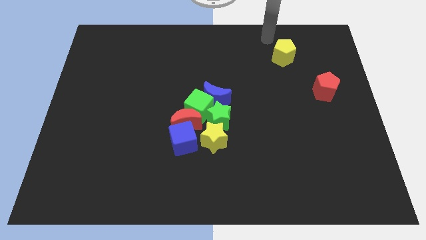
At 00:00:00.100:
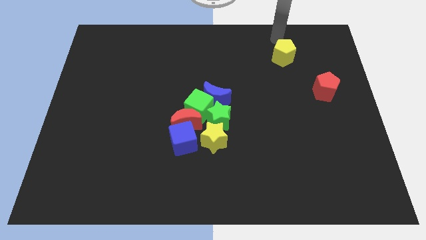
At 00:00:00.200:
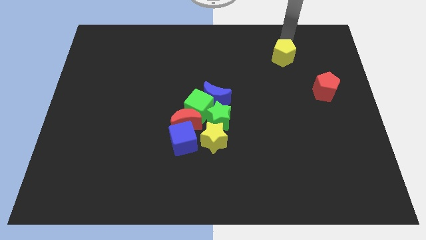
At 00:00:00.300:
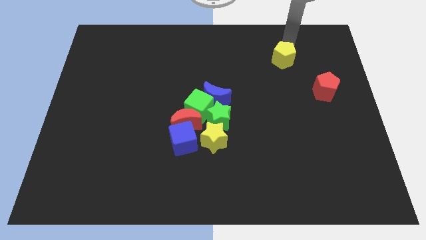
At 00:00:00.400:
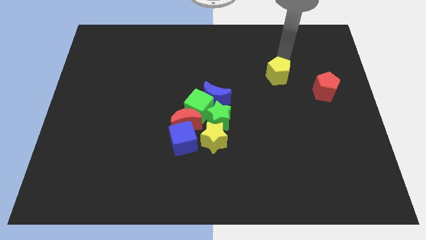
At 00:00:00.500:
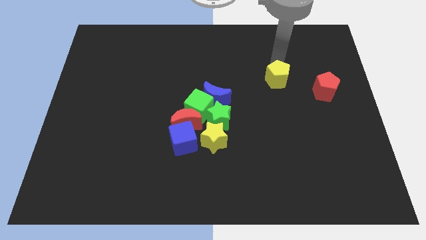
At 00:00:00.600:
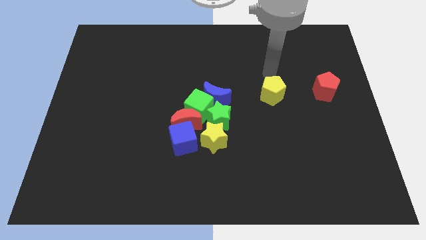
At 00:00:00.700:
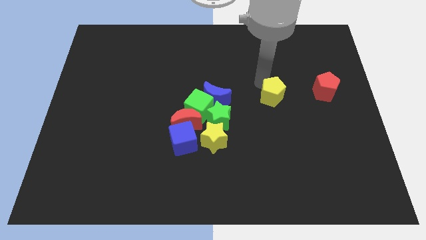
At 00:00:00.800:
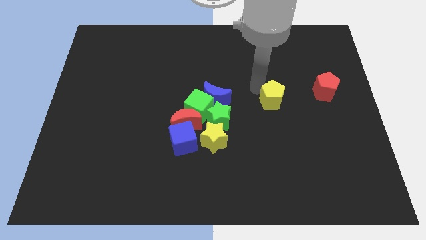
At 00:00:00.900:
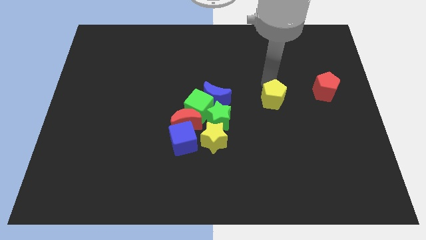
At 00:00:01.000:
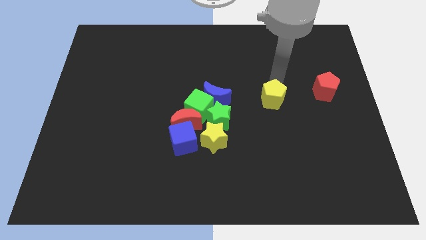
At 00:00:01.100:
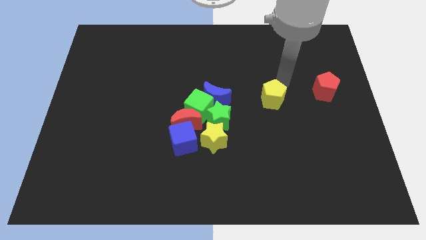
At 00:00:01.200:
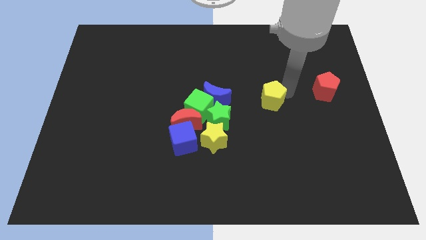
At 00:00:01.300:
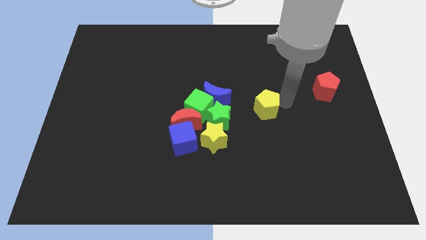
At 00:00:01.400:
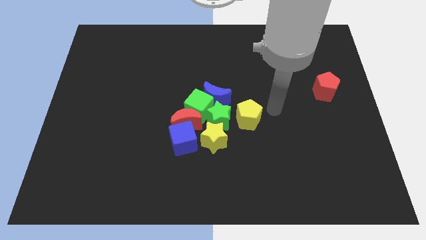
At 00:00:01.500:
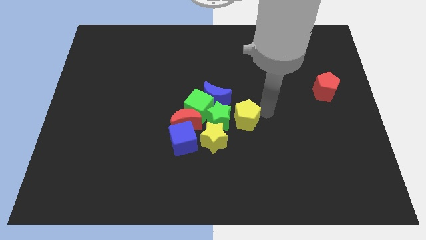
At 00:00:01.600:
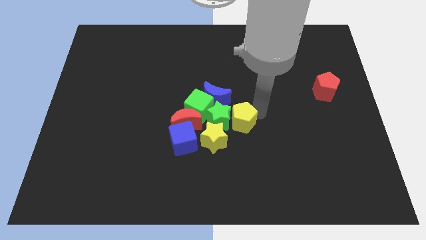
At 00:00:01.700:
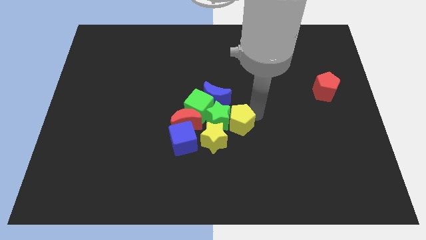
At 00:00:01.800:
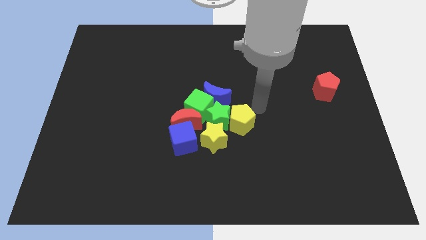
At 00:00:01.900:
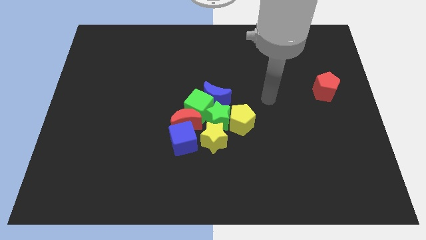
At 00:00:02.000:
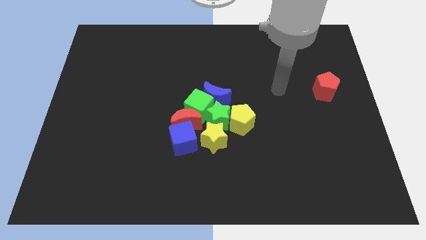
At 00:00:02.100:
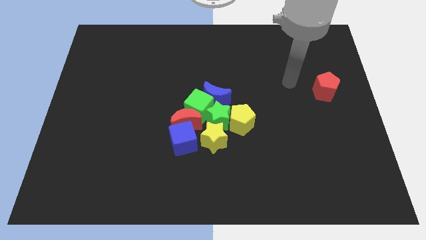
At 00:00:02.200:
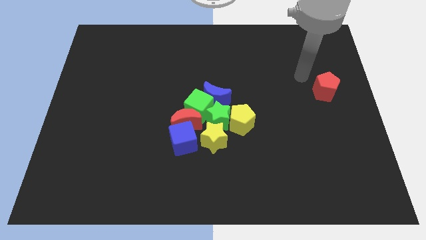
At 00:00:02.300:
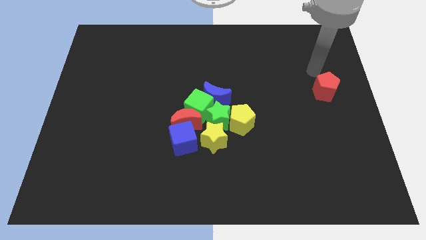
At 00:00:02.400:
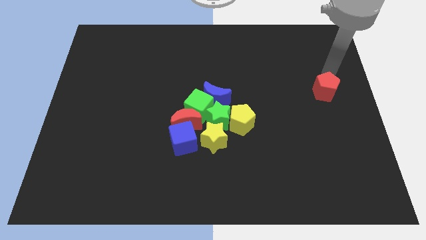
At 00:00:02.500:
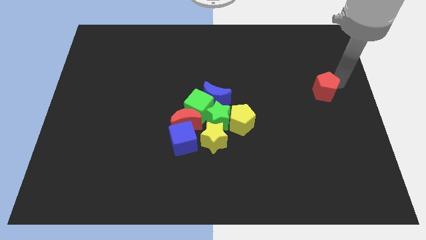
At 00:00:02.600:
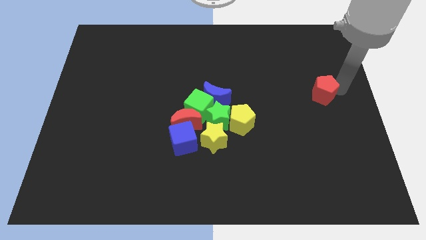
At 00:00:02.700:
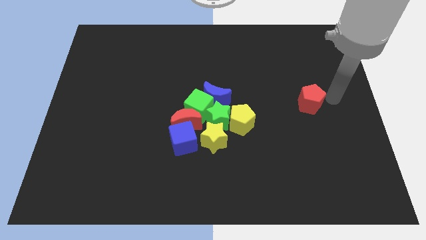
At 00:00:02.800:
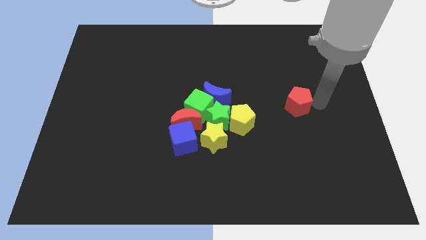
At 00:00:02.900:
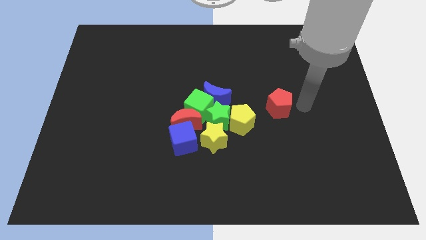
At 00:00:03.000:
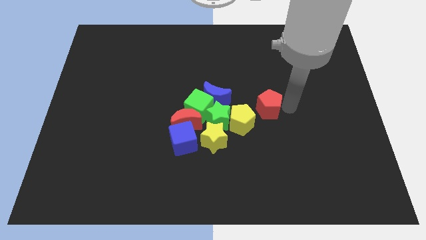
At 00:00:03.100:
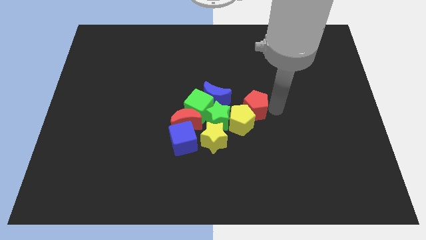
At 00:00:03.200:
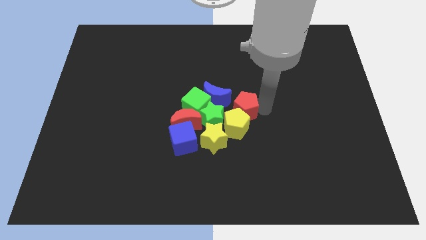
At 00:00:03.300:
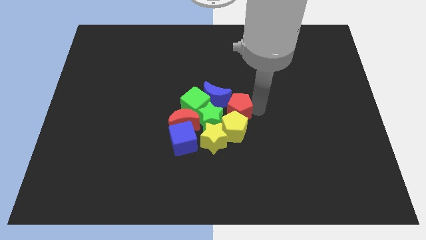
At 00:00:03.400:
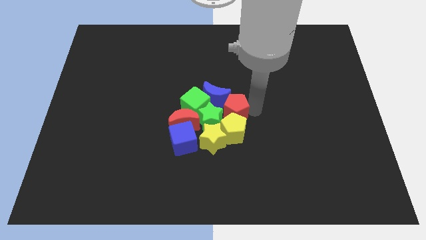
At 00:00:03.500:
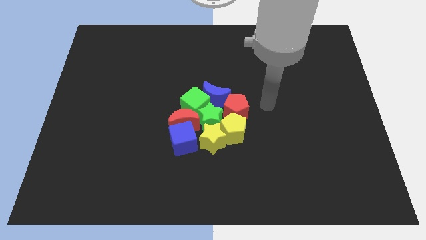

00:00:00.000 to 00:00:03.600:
move red pentagon into the group of blocks at center

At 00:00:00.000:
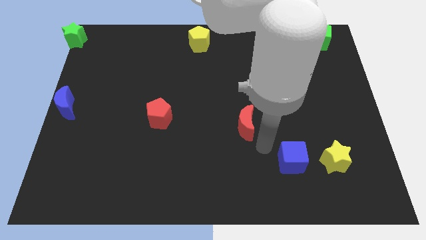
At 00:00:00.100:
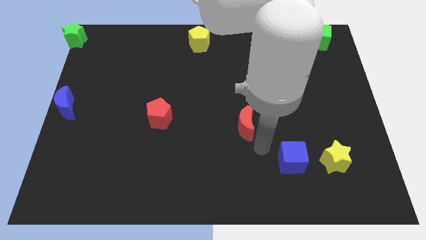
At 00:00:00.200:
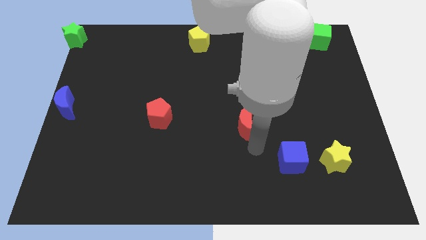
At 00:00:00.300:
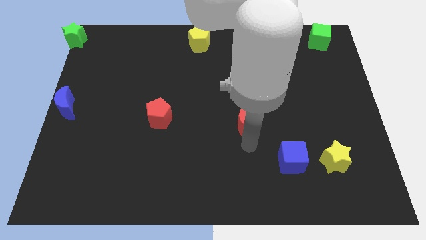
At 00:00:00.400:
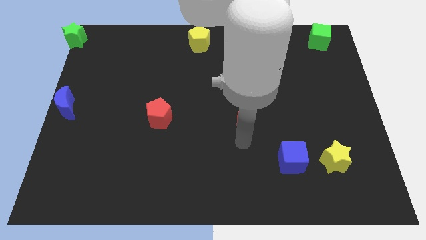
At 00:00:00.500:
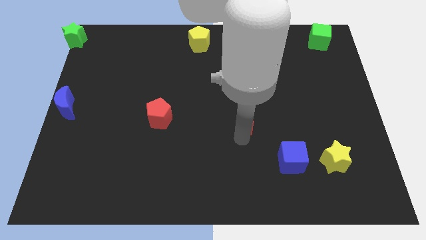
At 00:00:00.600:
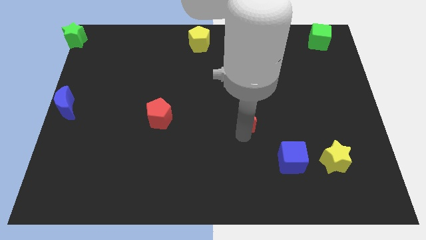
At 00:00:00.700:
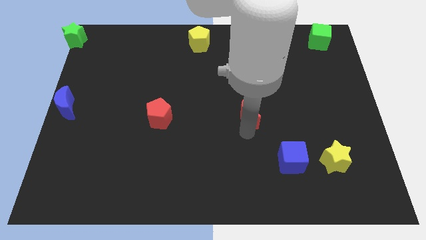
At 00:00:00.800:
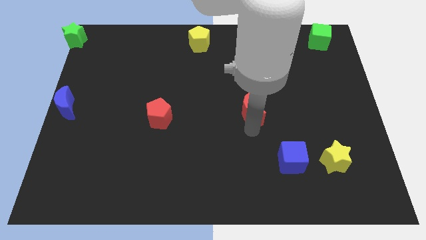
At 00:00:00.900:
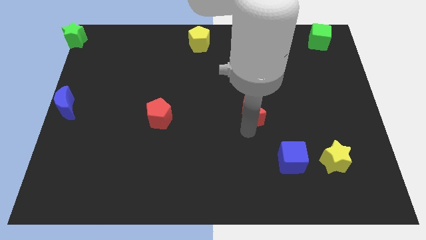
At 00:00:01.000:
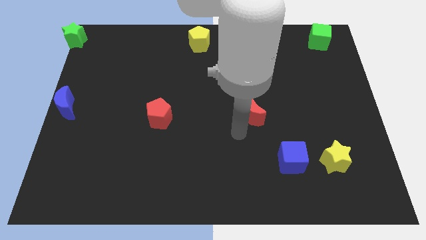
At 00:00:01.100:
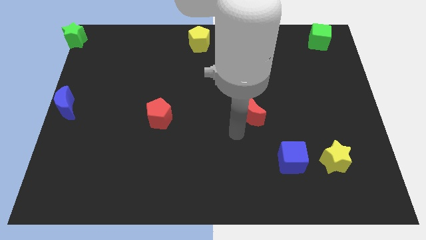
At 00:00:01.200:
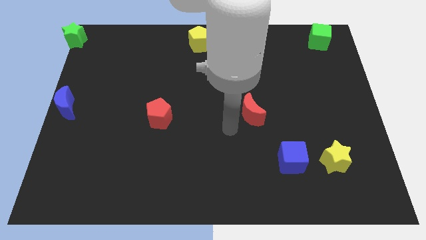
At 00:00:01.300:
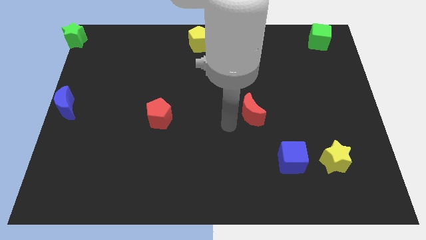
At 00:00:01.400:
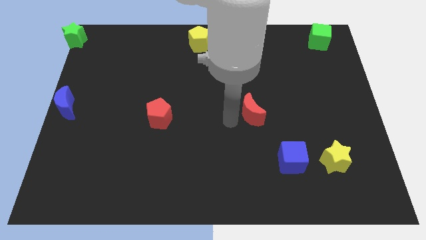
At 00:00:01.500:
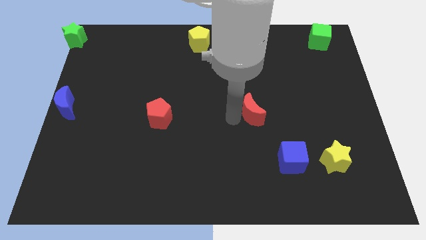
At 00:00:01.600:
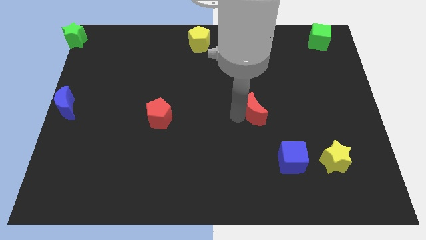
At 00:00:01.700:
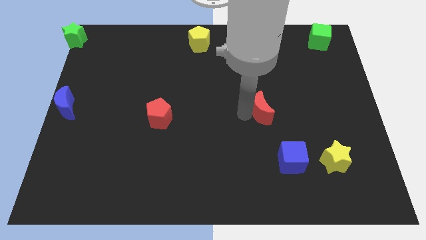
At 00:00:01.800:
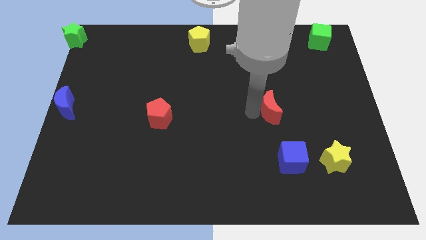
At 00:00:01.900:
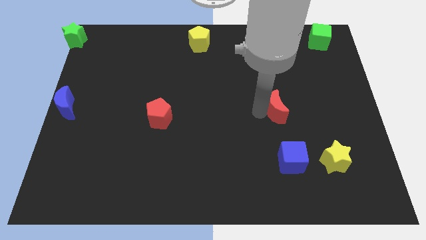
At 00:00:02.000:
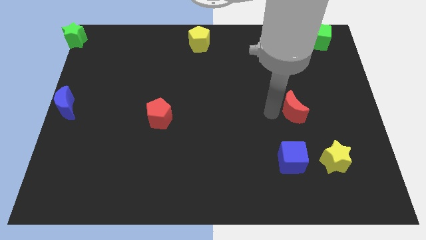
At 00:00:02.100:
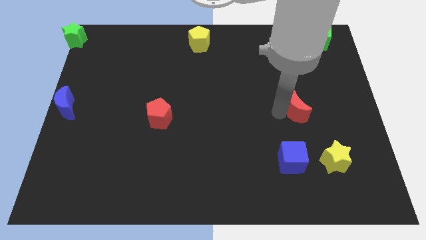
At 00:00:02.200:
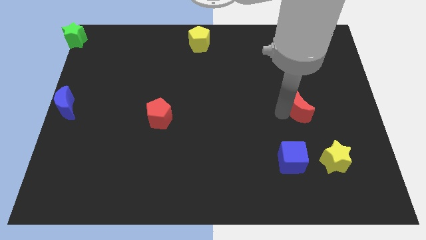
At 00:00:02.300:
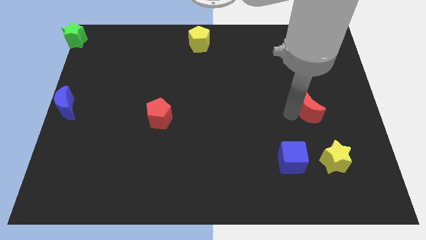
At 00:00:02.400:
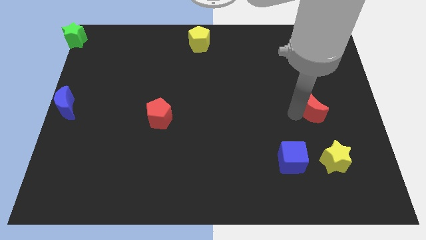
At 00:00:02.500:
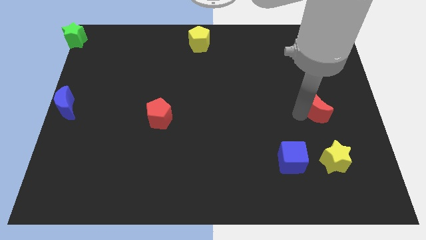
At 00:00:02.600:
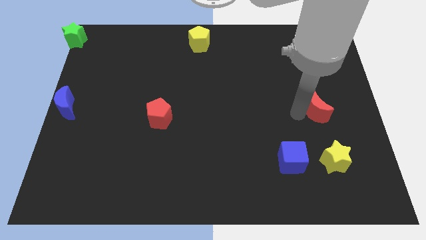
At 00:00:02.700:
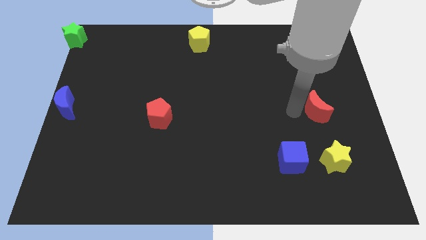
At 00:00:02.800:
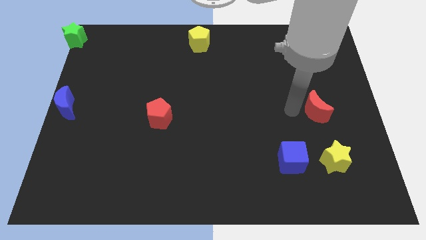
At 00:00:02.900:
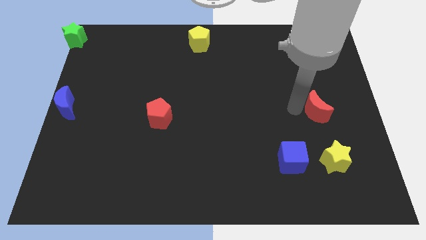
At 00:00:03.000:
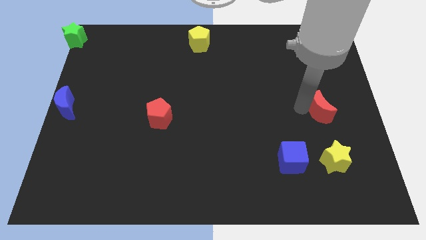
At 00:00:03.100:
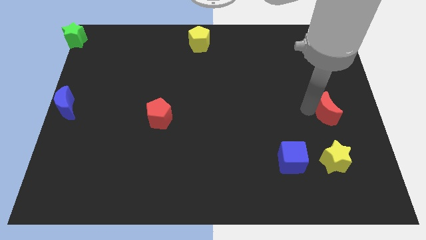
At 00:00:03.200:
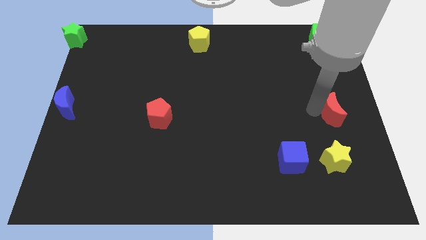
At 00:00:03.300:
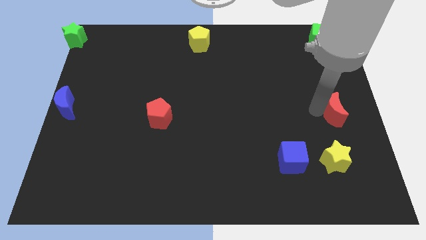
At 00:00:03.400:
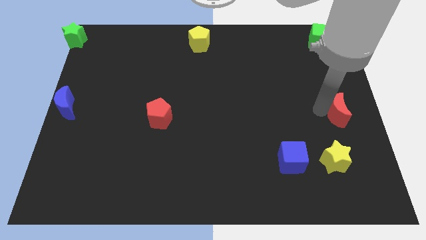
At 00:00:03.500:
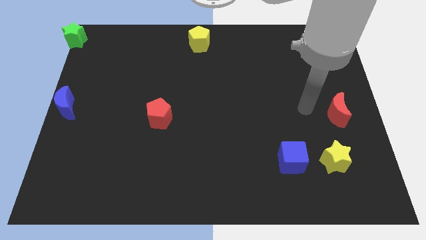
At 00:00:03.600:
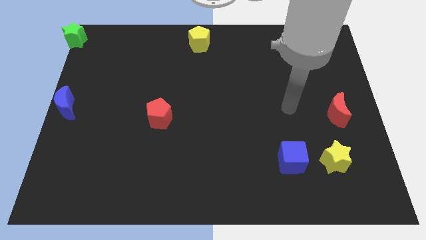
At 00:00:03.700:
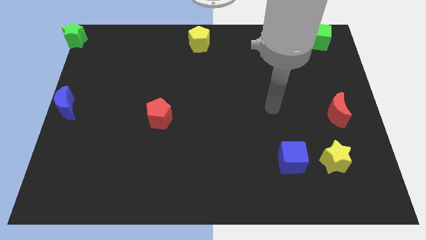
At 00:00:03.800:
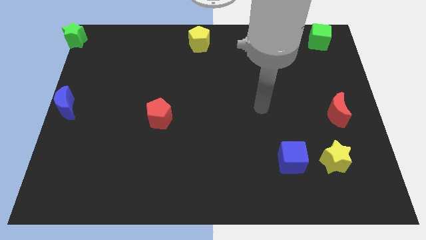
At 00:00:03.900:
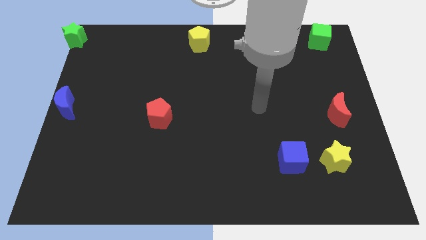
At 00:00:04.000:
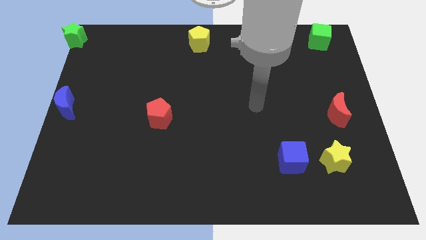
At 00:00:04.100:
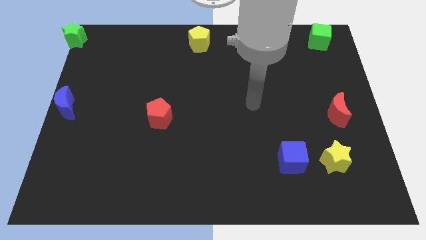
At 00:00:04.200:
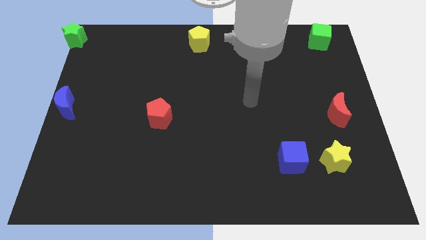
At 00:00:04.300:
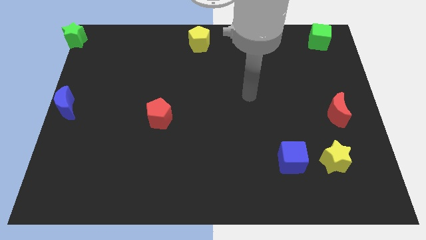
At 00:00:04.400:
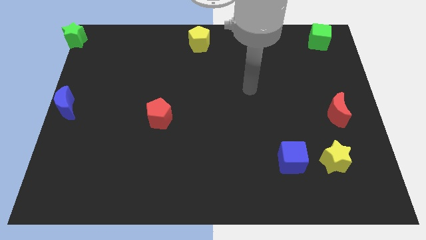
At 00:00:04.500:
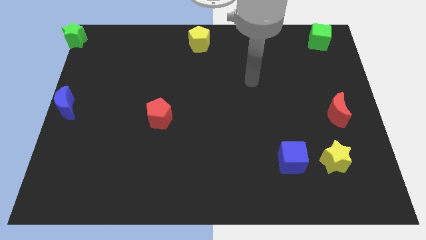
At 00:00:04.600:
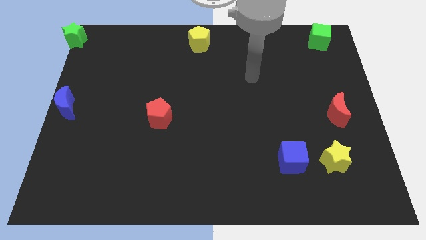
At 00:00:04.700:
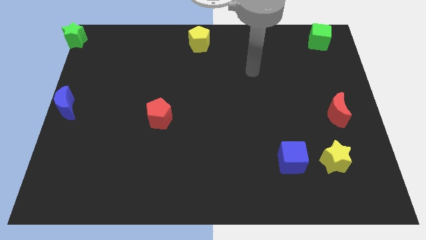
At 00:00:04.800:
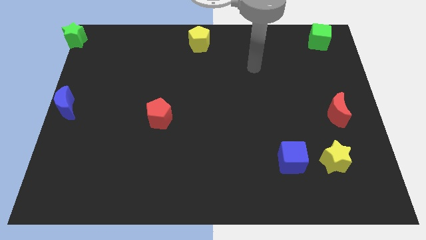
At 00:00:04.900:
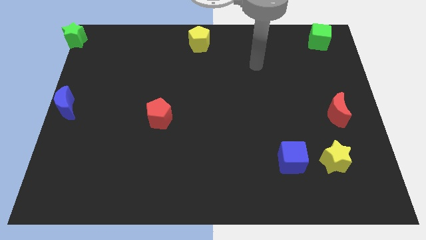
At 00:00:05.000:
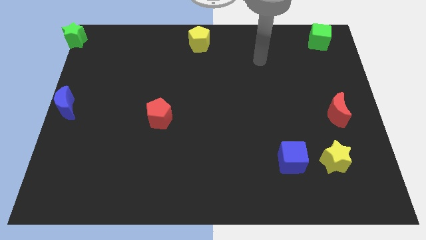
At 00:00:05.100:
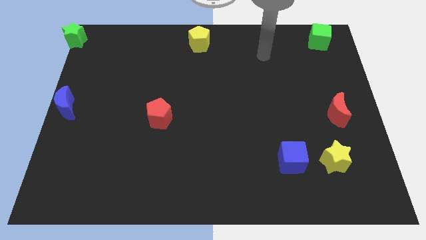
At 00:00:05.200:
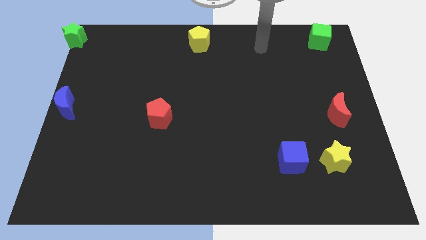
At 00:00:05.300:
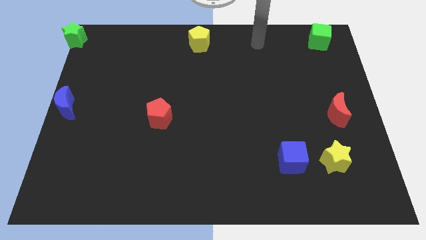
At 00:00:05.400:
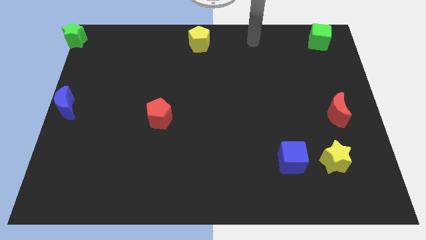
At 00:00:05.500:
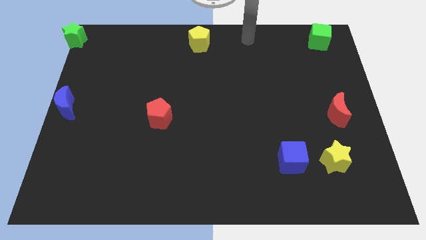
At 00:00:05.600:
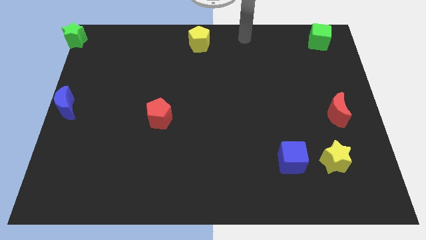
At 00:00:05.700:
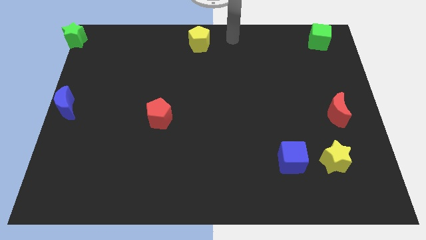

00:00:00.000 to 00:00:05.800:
push the red crescent to the right center of the board
